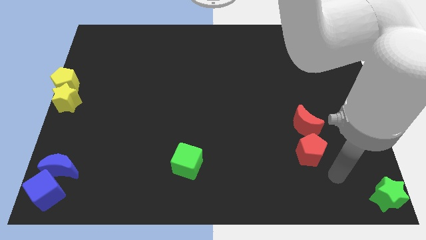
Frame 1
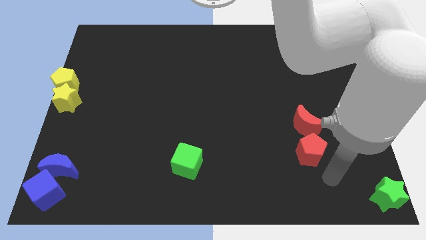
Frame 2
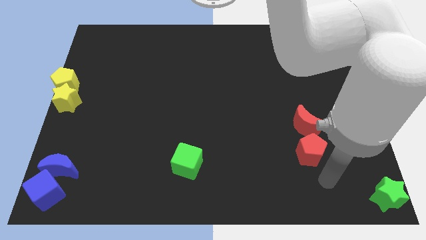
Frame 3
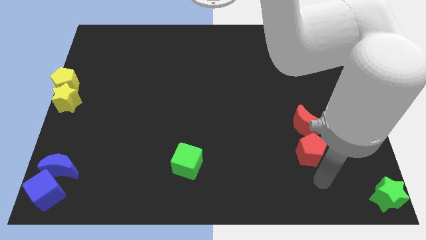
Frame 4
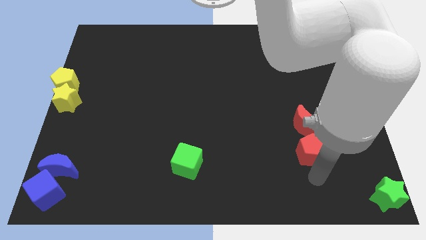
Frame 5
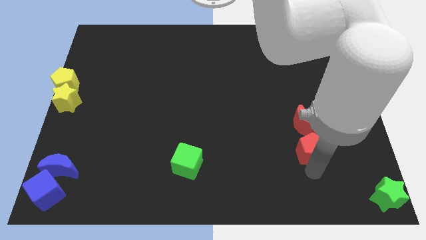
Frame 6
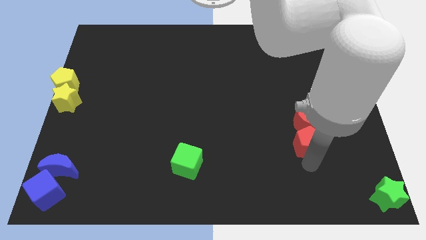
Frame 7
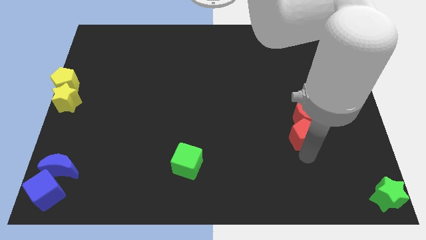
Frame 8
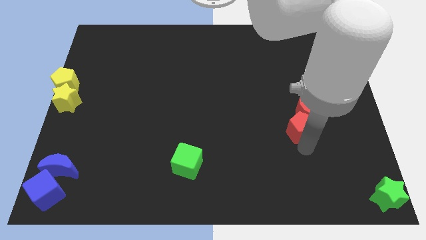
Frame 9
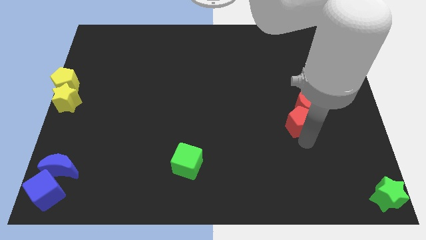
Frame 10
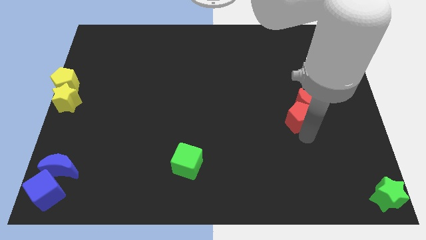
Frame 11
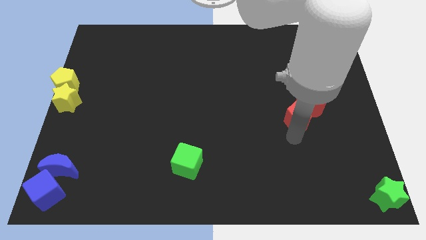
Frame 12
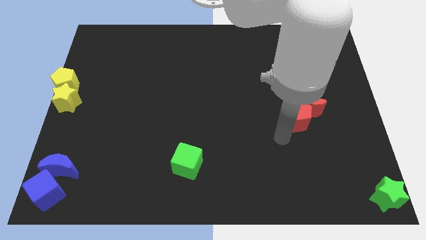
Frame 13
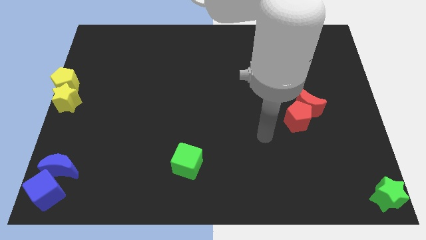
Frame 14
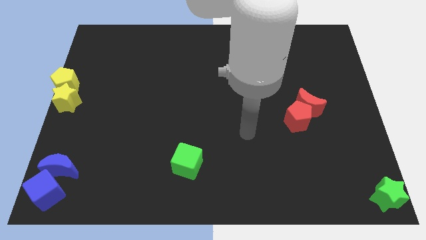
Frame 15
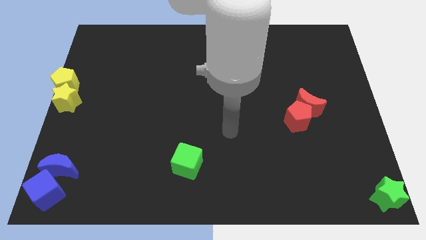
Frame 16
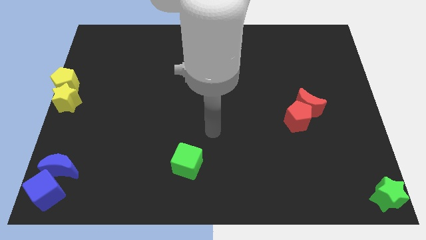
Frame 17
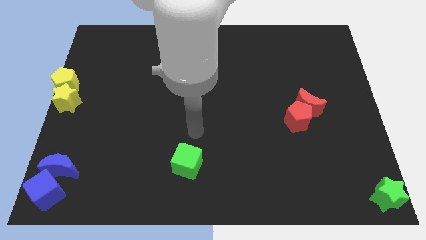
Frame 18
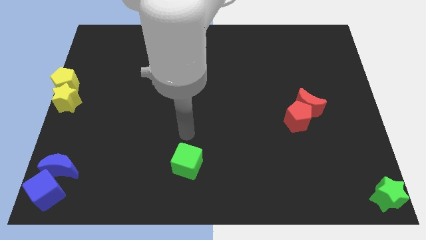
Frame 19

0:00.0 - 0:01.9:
push the red pentagon into the red crescent

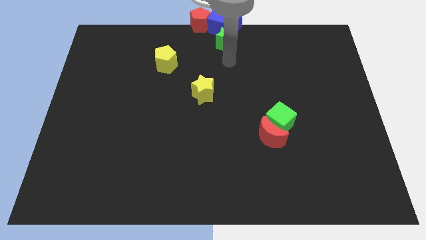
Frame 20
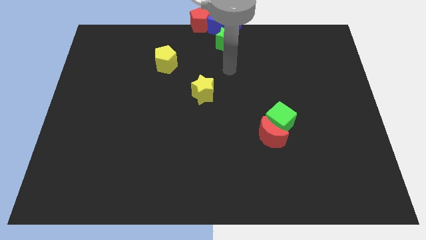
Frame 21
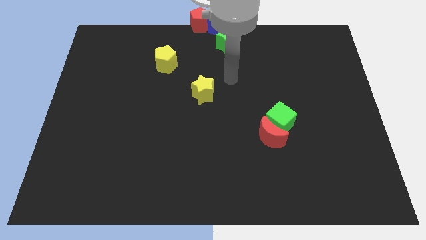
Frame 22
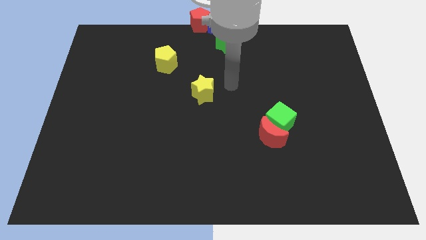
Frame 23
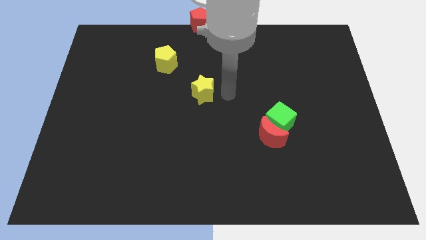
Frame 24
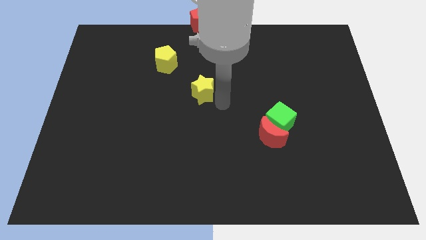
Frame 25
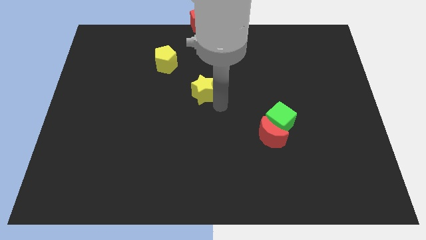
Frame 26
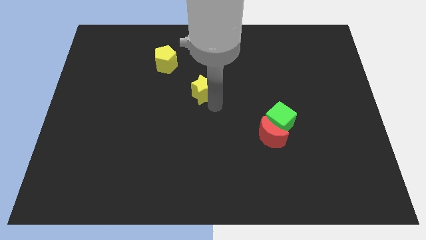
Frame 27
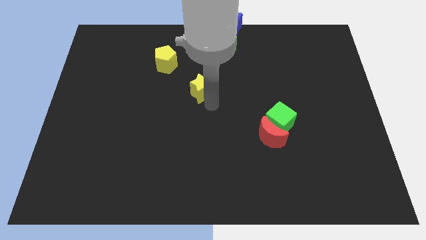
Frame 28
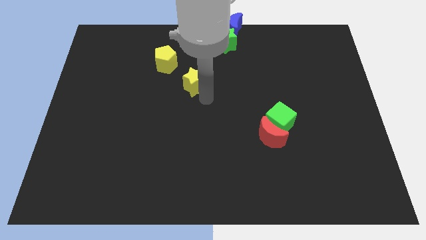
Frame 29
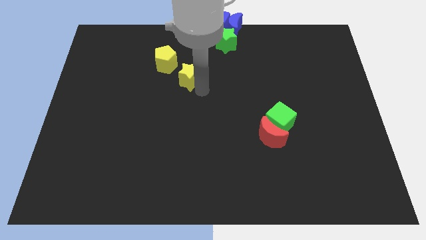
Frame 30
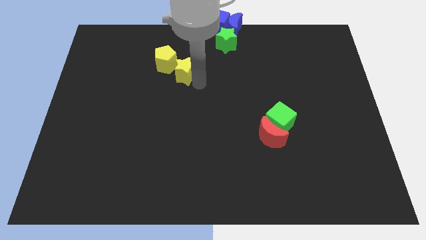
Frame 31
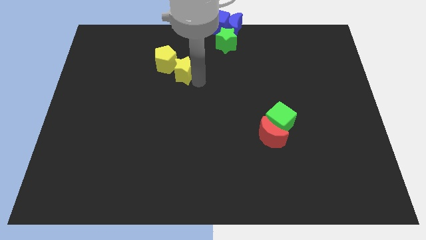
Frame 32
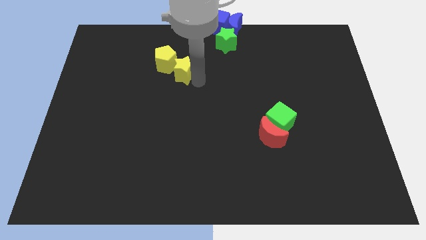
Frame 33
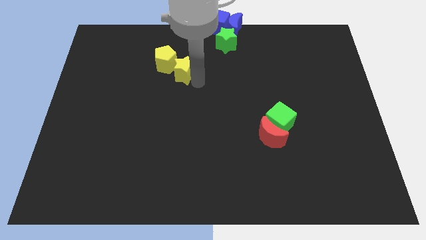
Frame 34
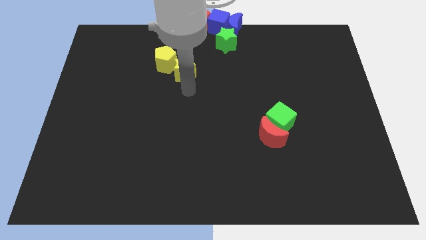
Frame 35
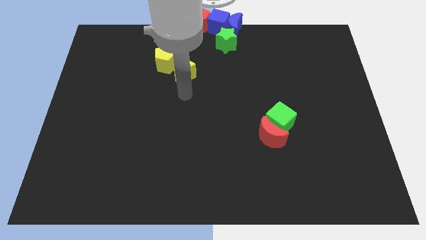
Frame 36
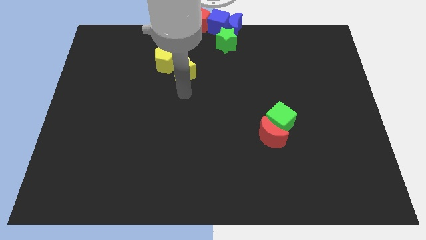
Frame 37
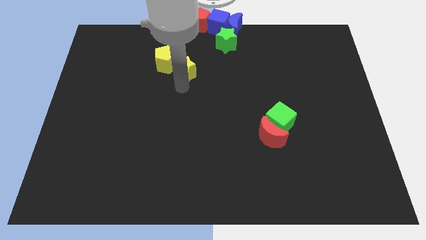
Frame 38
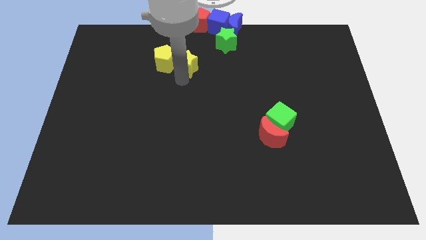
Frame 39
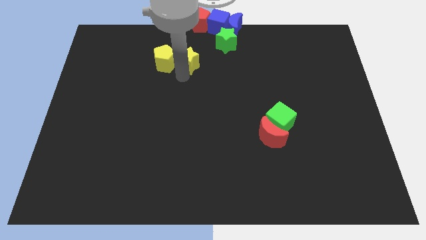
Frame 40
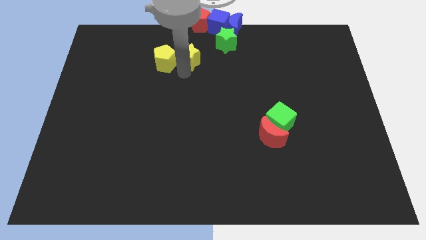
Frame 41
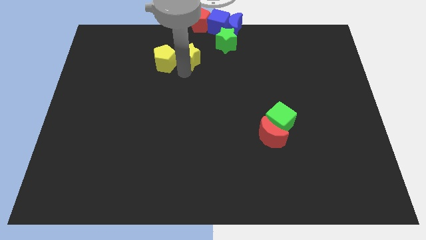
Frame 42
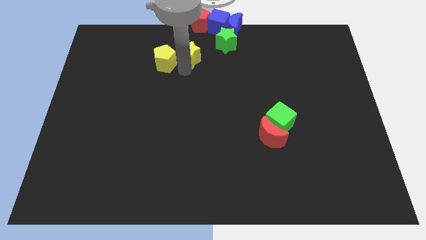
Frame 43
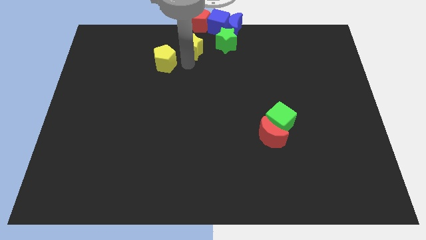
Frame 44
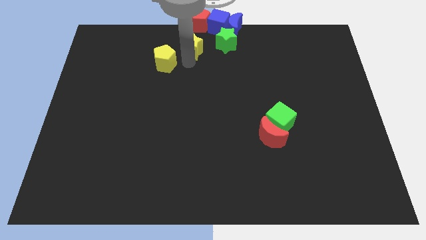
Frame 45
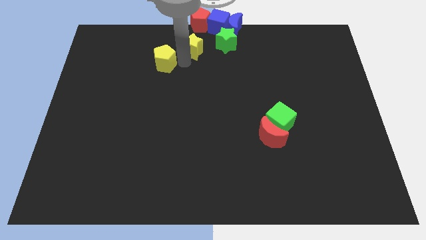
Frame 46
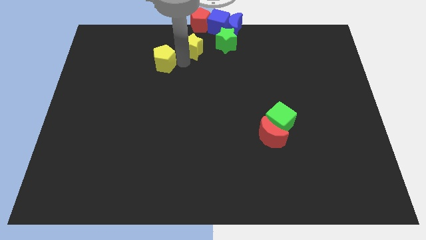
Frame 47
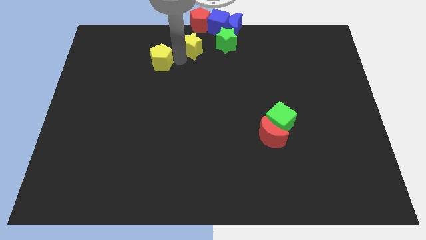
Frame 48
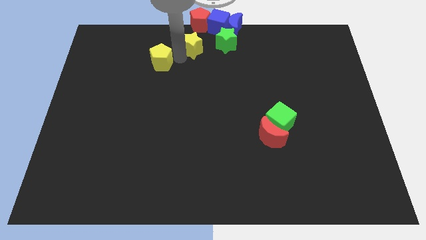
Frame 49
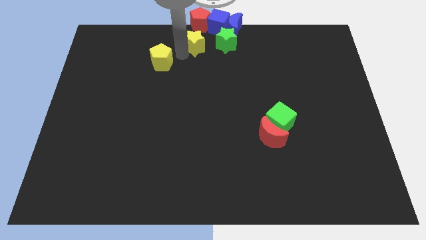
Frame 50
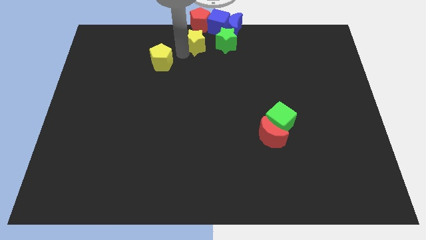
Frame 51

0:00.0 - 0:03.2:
slide the yellow star below the red pentagon

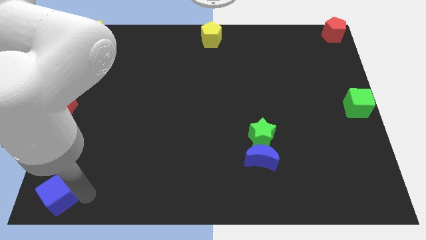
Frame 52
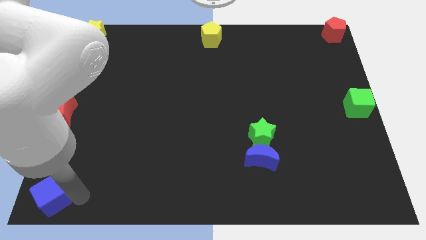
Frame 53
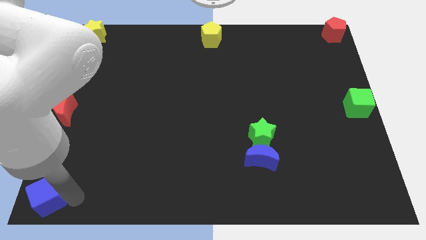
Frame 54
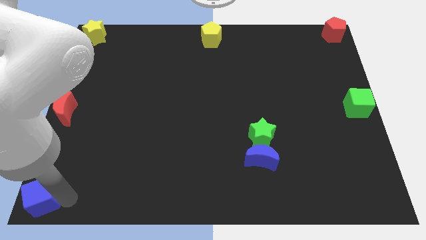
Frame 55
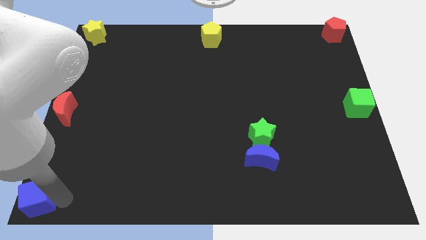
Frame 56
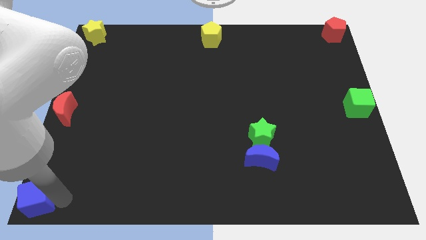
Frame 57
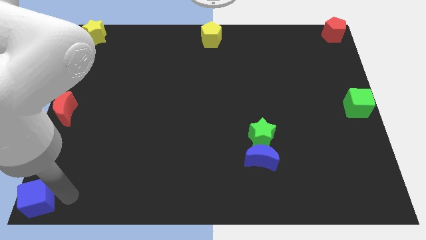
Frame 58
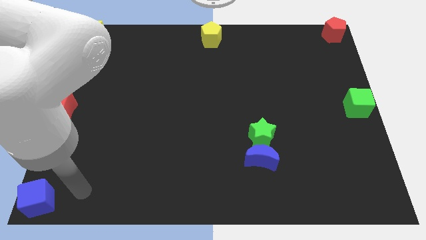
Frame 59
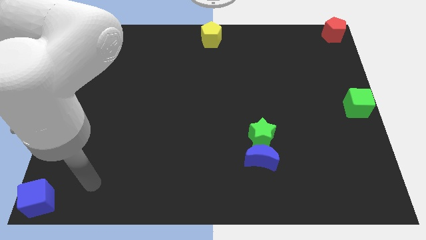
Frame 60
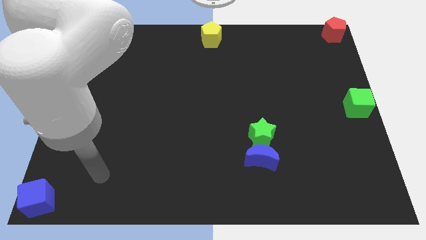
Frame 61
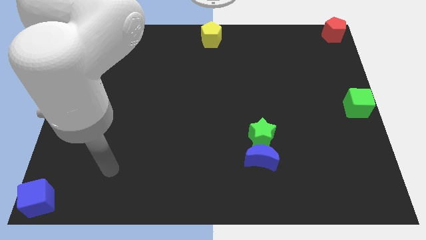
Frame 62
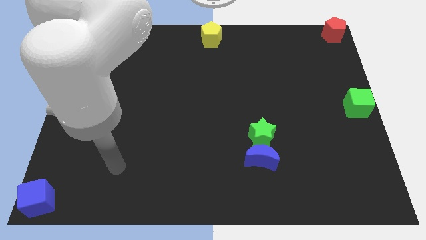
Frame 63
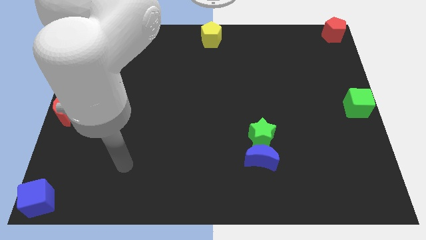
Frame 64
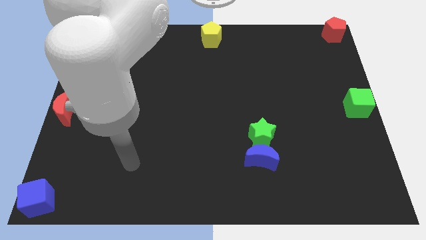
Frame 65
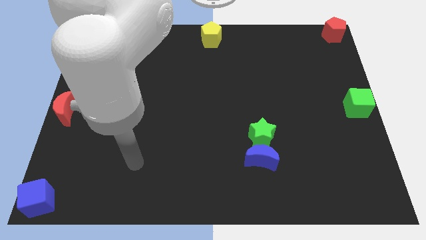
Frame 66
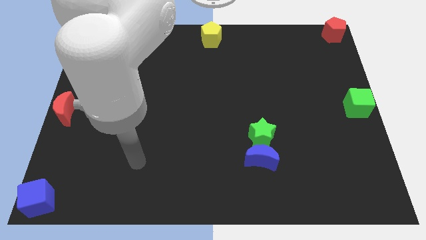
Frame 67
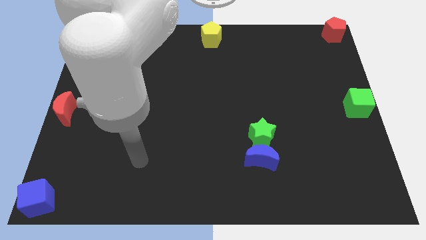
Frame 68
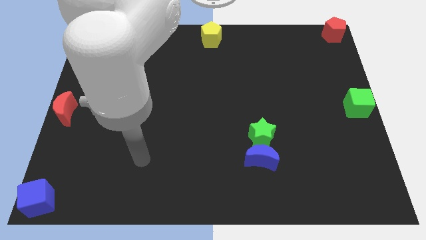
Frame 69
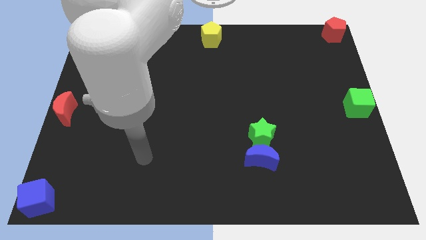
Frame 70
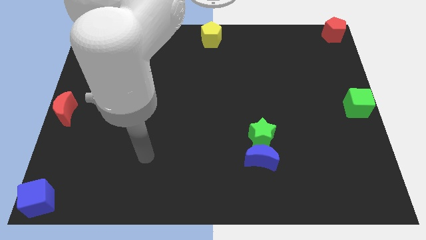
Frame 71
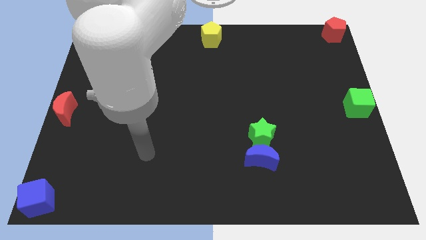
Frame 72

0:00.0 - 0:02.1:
push the blue cube towards the bottom left corner of the board

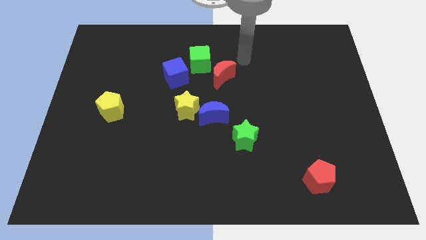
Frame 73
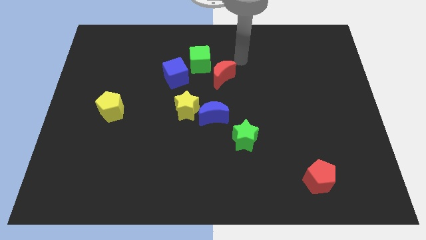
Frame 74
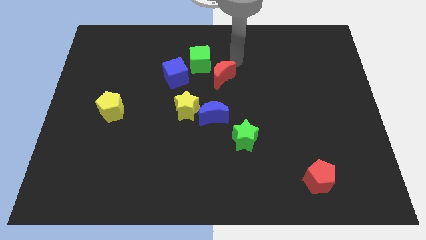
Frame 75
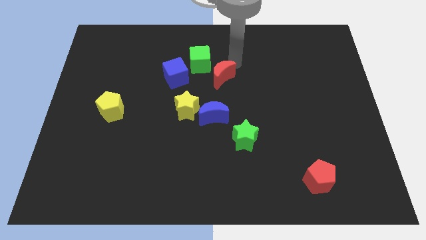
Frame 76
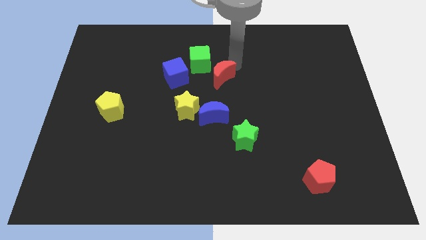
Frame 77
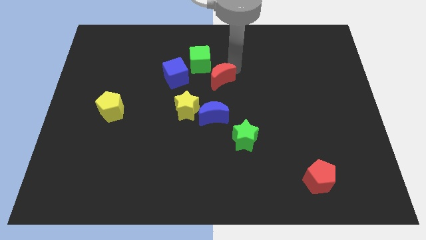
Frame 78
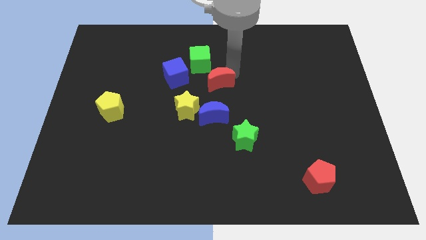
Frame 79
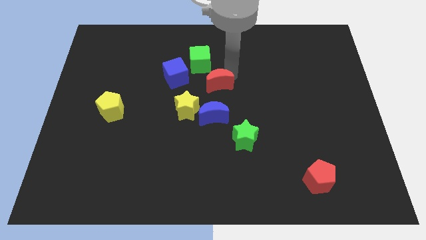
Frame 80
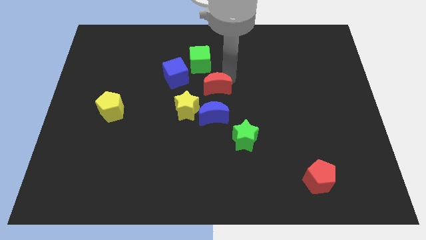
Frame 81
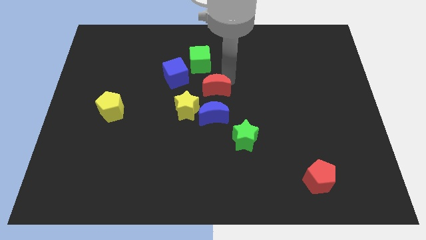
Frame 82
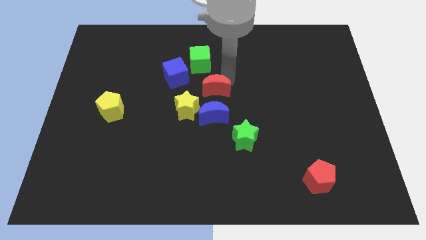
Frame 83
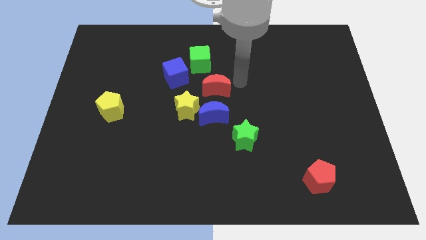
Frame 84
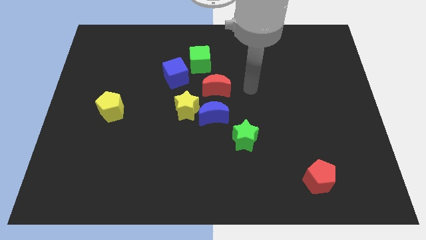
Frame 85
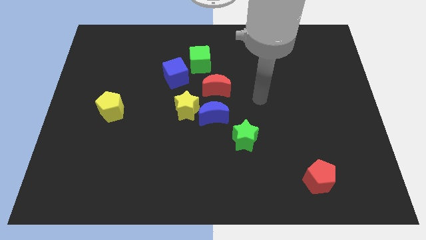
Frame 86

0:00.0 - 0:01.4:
push the red crescent towards the blue crescent

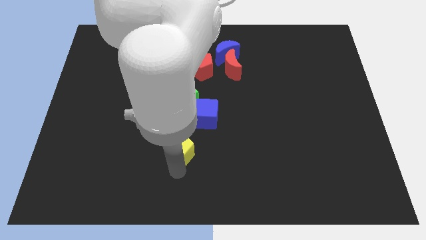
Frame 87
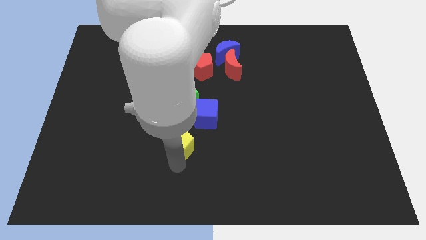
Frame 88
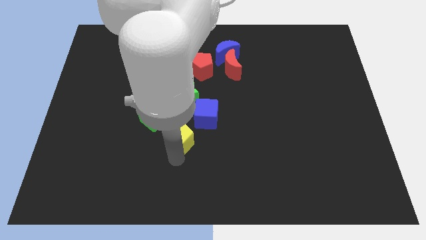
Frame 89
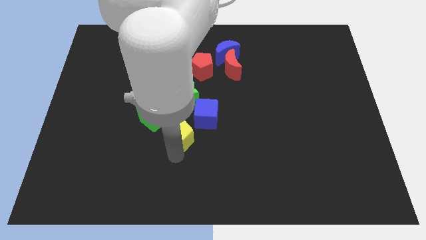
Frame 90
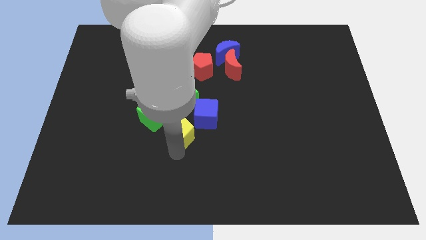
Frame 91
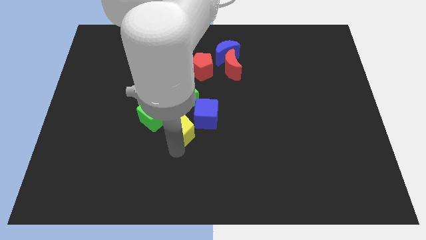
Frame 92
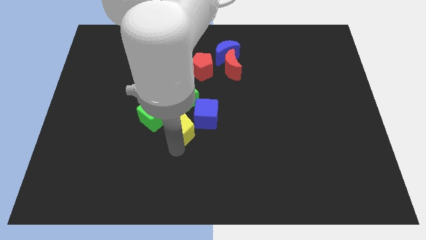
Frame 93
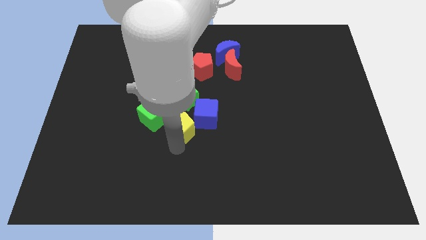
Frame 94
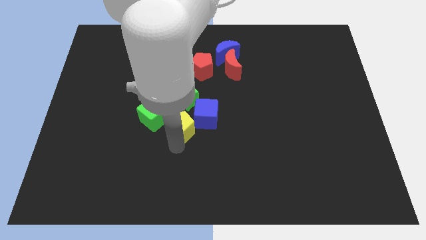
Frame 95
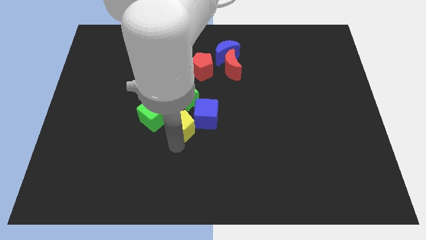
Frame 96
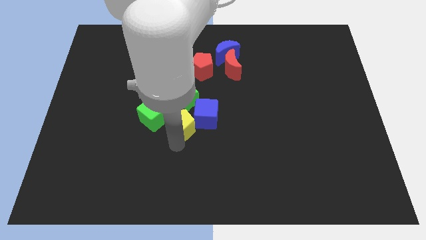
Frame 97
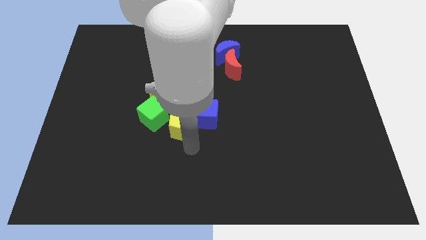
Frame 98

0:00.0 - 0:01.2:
push yellow pentagon into green and blue cubes
